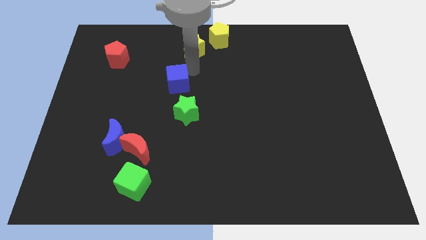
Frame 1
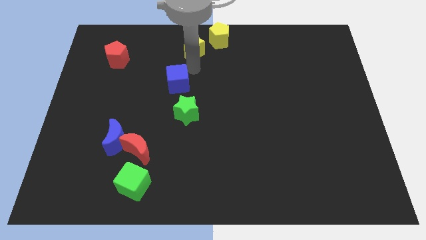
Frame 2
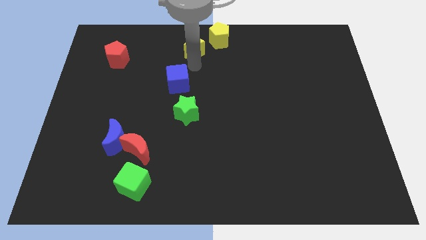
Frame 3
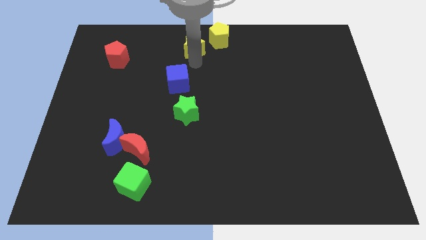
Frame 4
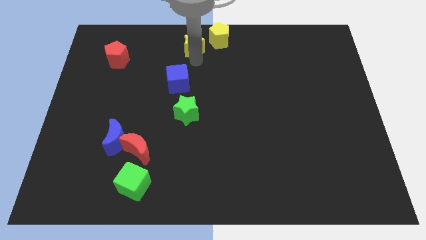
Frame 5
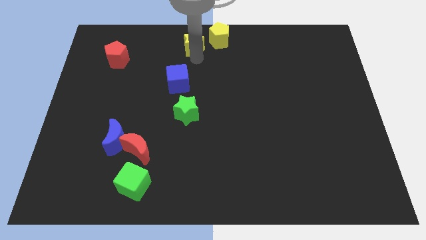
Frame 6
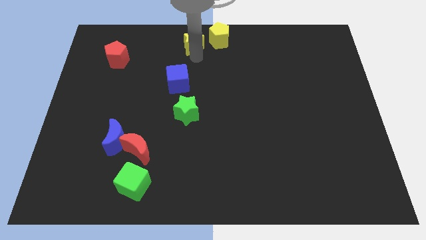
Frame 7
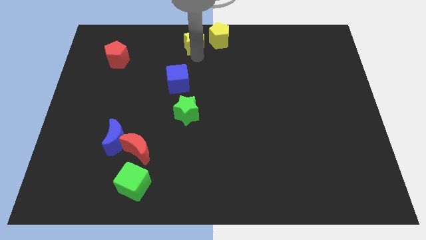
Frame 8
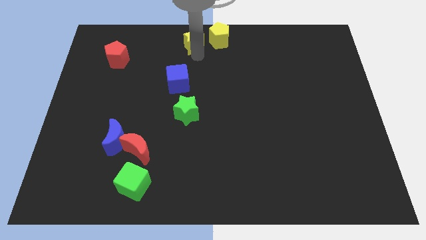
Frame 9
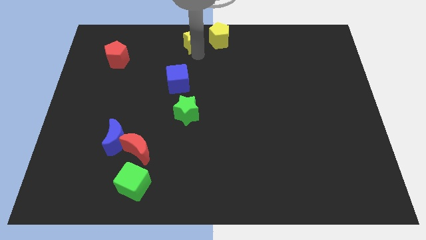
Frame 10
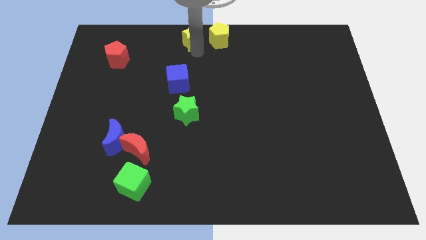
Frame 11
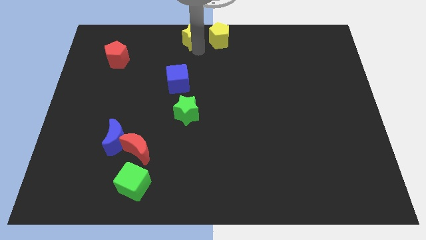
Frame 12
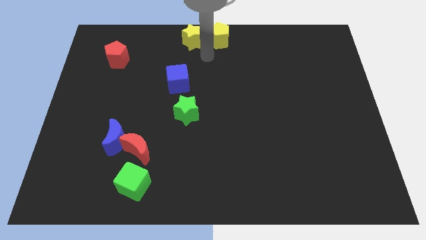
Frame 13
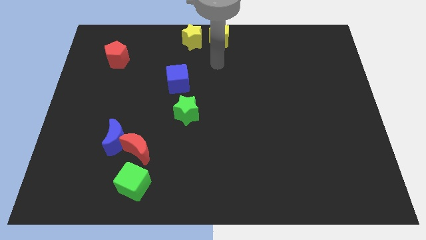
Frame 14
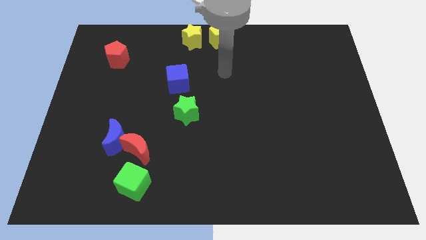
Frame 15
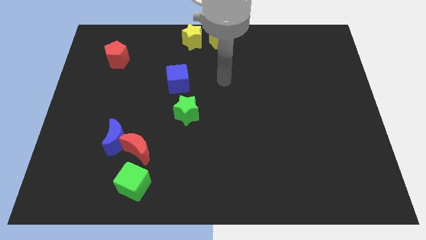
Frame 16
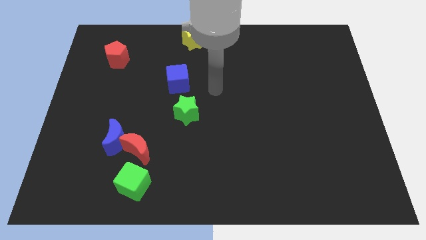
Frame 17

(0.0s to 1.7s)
move the yellow star left to the yellow pentagon

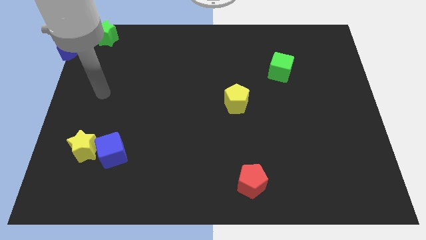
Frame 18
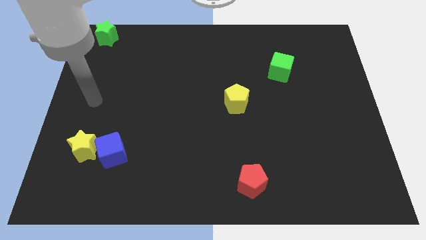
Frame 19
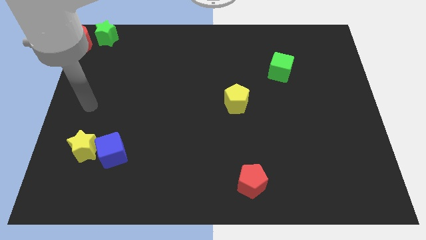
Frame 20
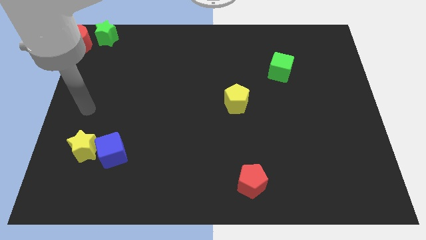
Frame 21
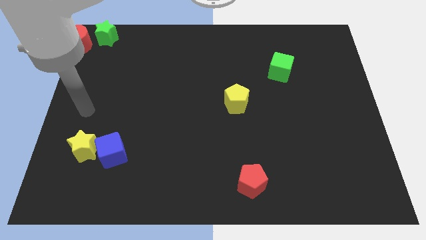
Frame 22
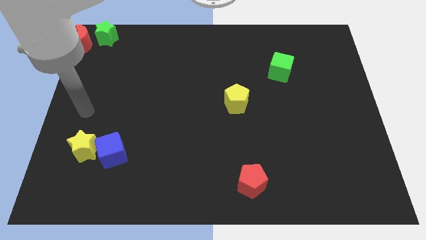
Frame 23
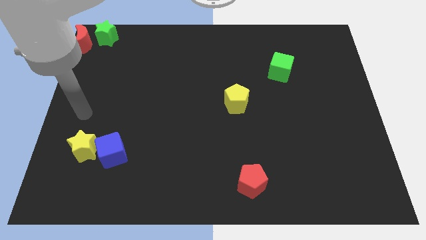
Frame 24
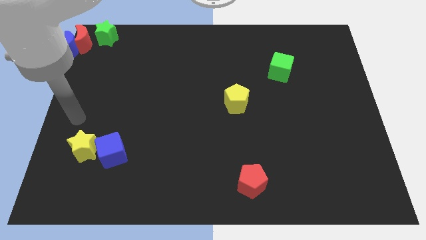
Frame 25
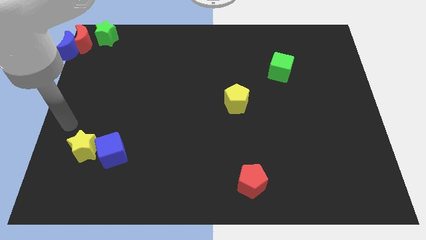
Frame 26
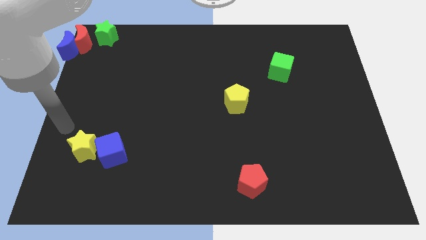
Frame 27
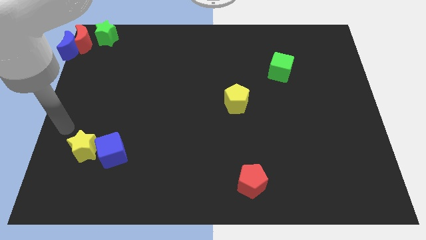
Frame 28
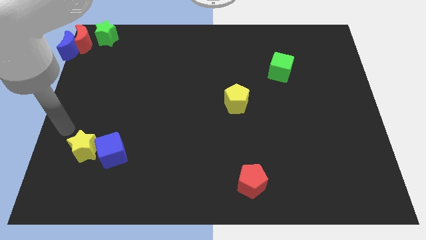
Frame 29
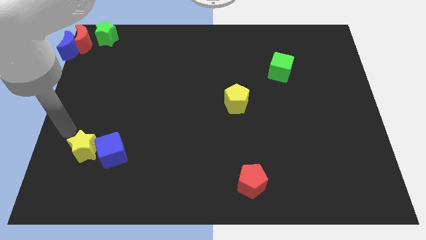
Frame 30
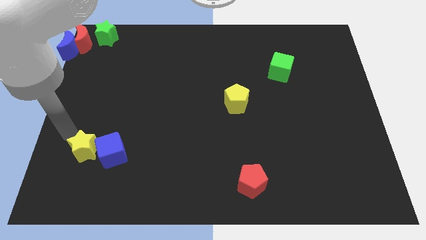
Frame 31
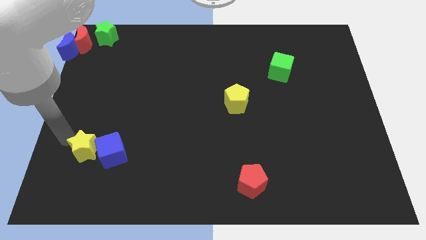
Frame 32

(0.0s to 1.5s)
move your arm towards the yellow star

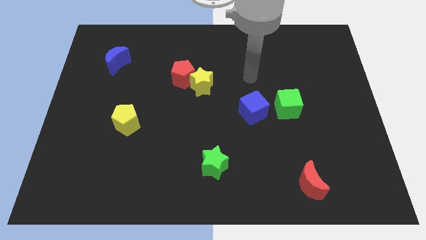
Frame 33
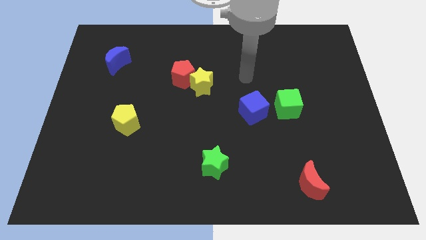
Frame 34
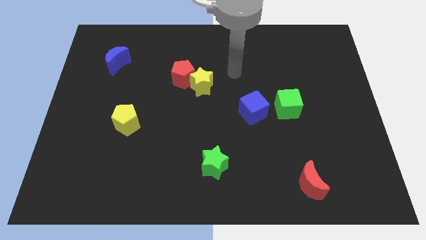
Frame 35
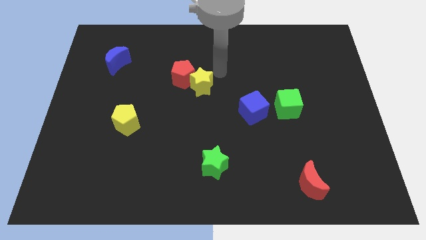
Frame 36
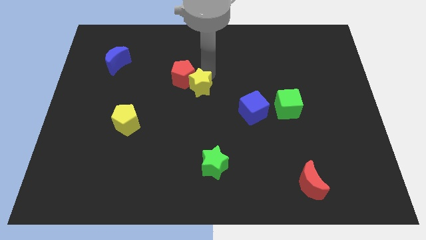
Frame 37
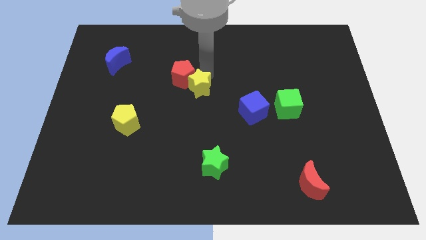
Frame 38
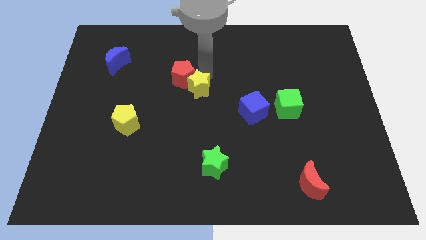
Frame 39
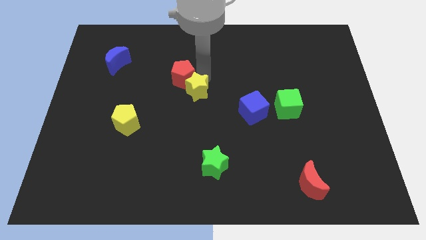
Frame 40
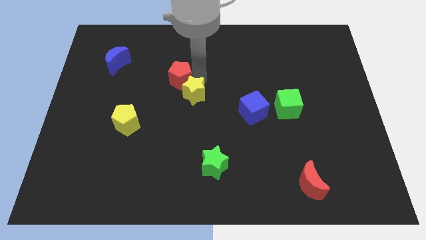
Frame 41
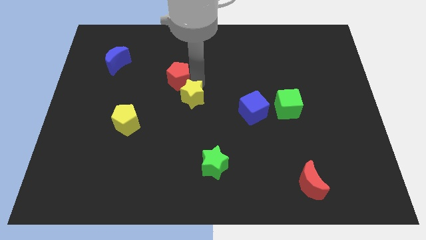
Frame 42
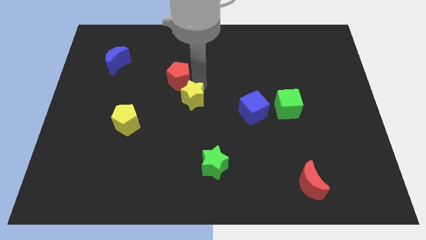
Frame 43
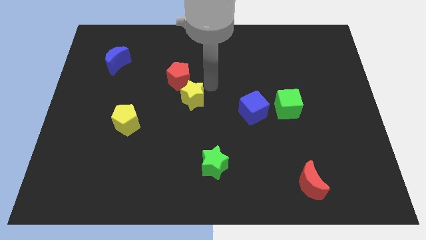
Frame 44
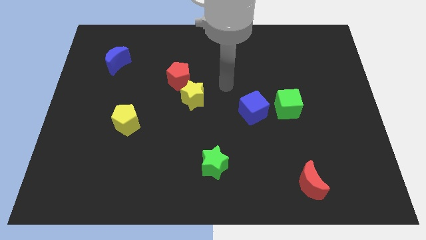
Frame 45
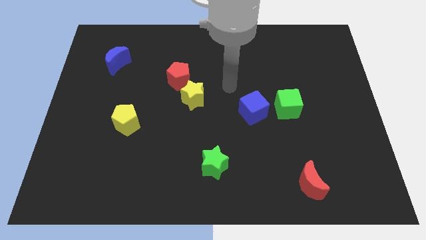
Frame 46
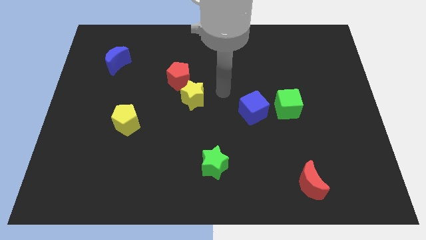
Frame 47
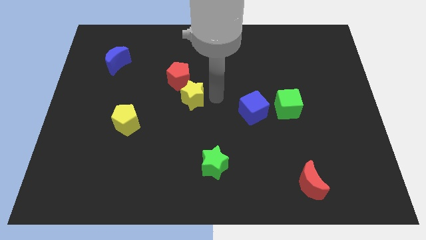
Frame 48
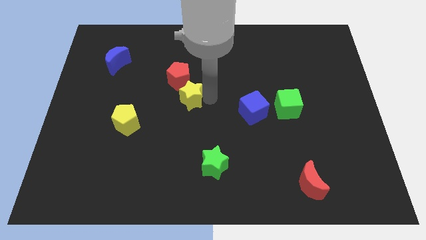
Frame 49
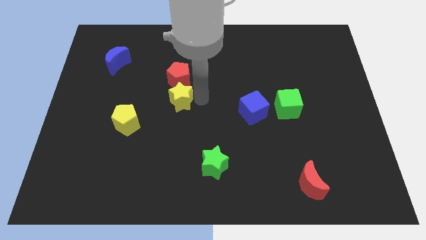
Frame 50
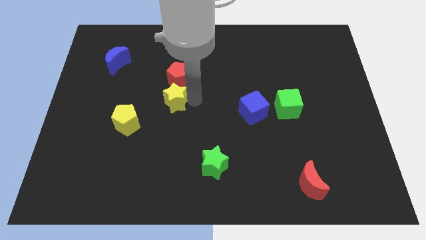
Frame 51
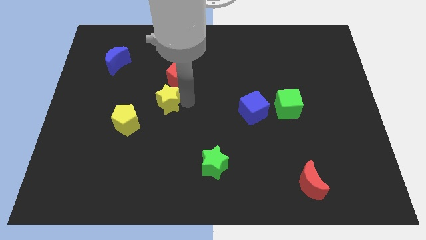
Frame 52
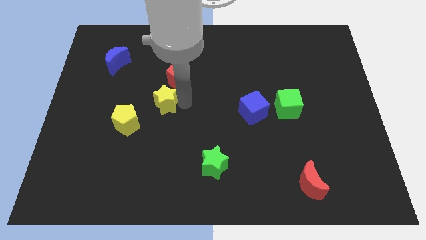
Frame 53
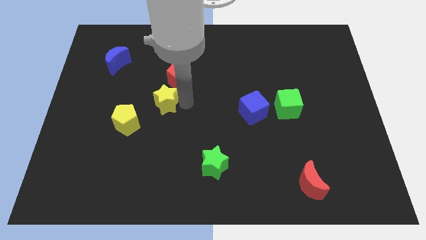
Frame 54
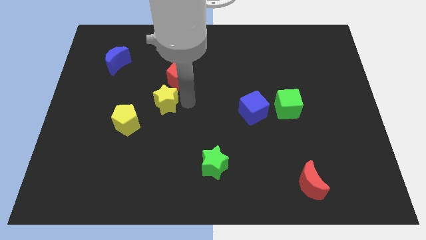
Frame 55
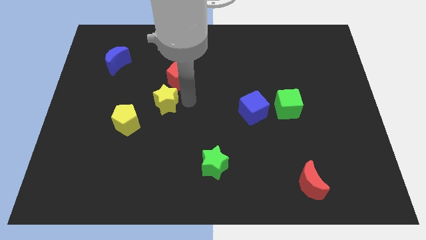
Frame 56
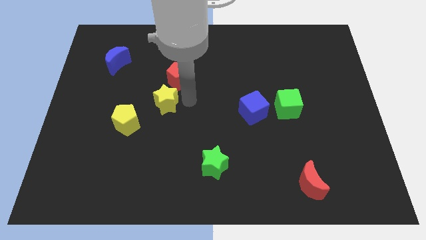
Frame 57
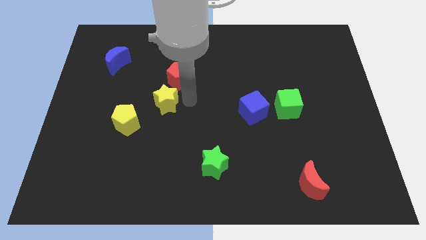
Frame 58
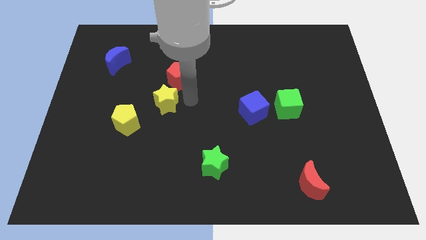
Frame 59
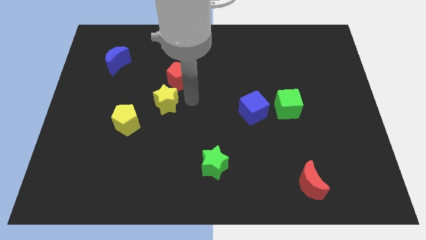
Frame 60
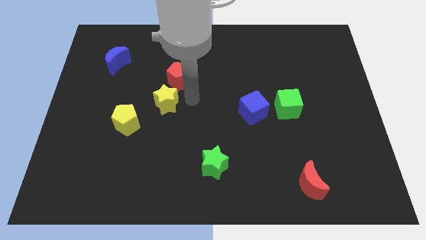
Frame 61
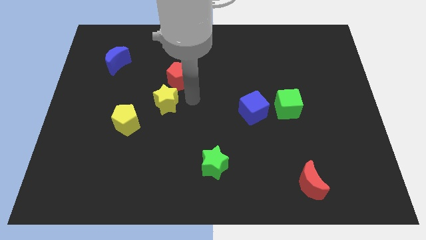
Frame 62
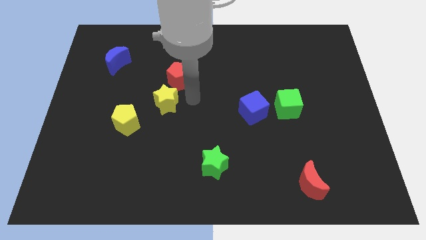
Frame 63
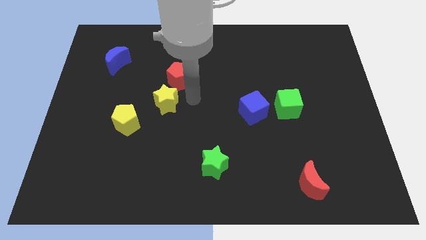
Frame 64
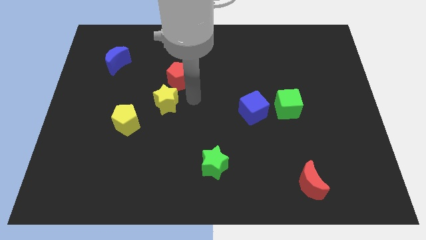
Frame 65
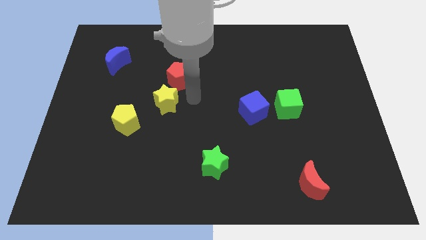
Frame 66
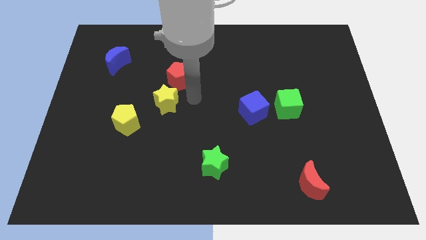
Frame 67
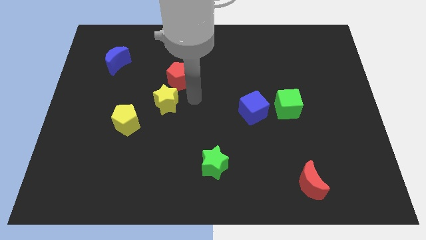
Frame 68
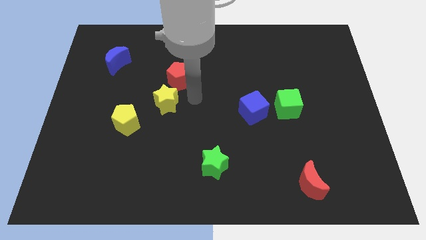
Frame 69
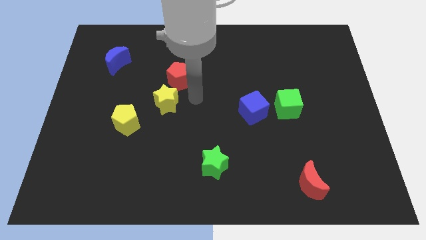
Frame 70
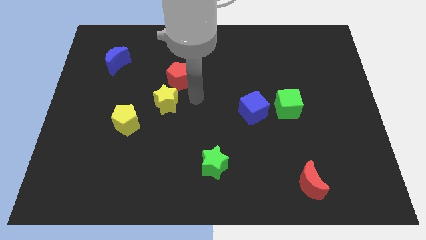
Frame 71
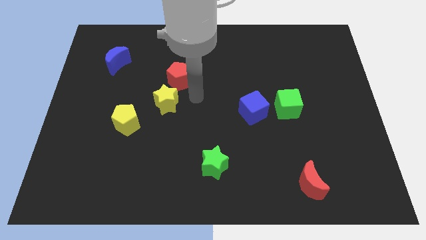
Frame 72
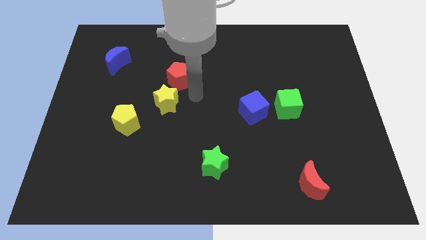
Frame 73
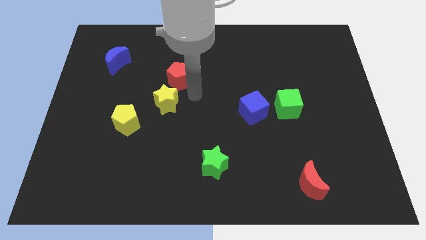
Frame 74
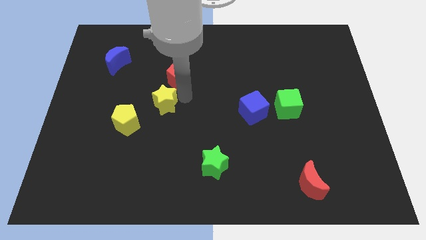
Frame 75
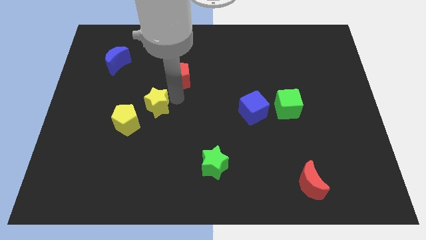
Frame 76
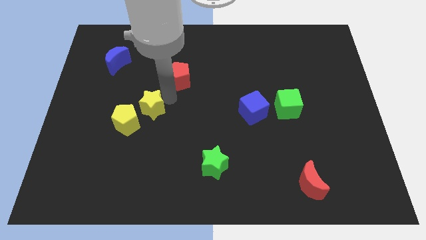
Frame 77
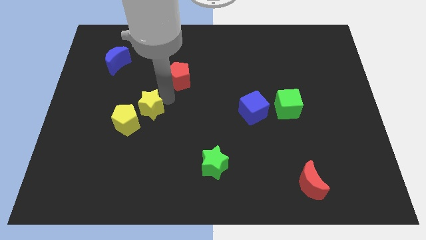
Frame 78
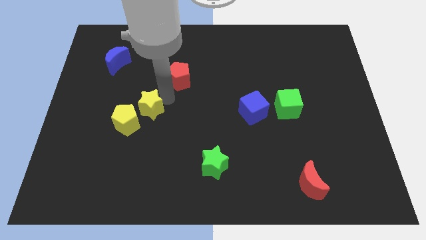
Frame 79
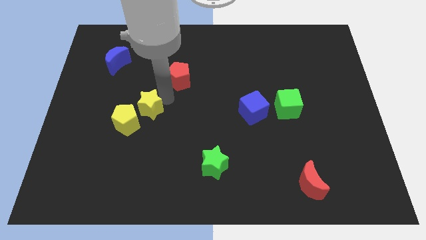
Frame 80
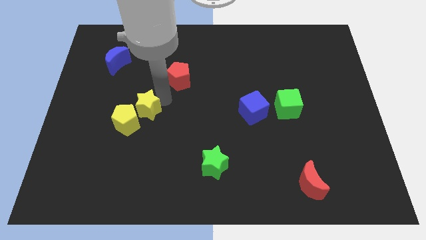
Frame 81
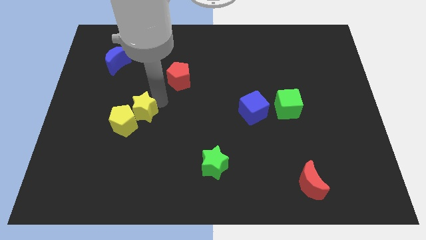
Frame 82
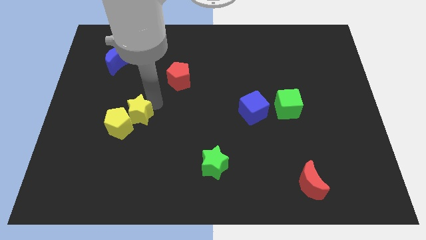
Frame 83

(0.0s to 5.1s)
place the yellow star to the top right of the yellow pentagon

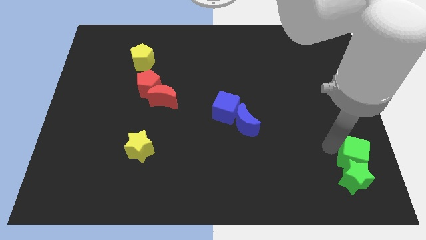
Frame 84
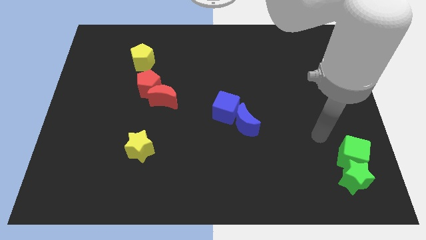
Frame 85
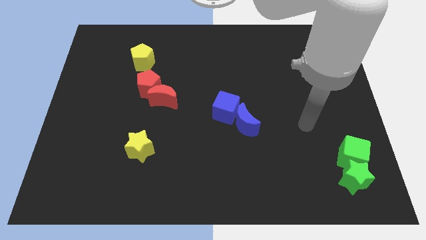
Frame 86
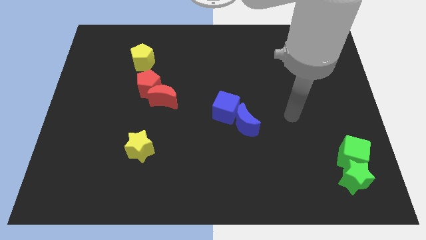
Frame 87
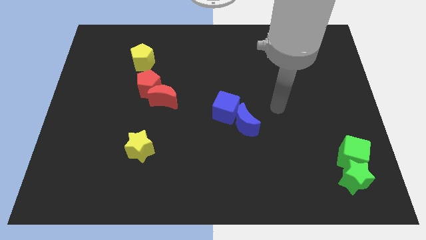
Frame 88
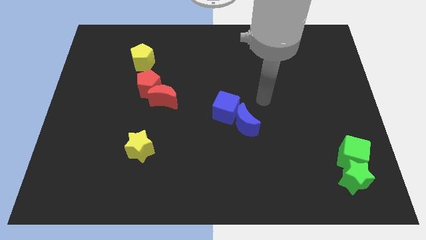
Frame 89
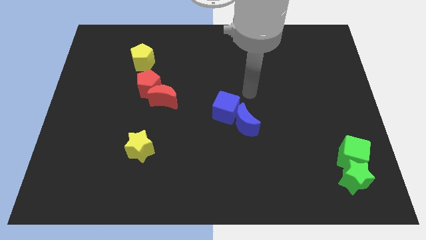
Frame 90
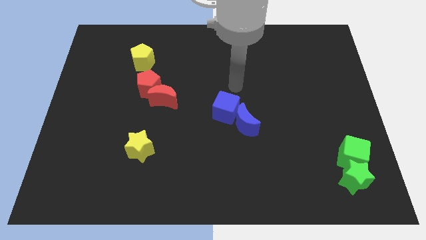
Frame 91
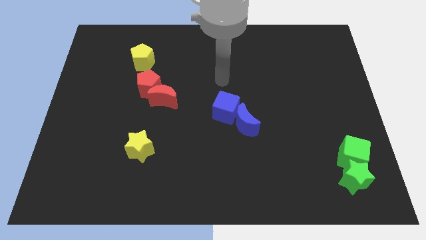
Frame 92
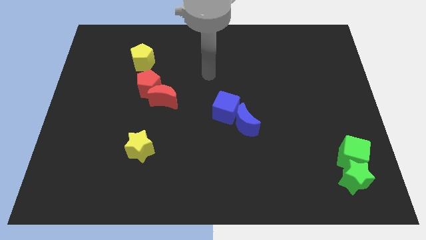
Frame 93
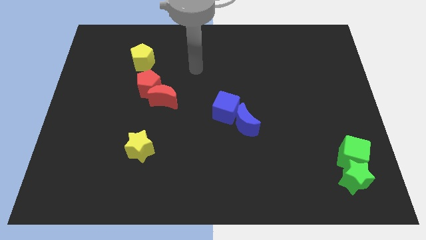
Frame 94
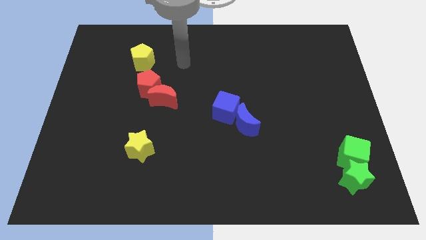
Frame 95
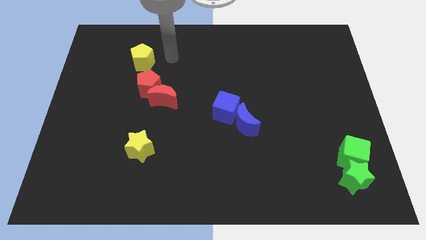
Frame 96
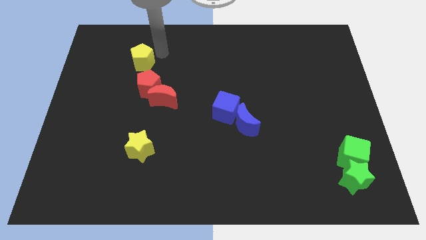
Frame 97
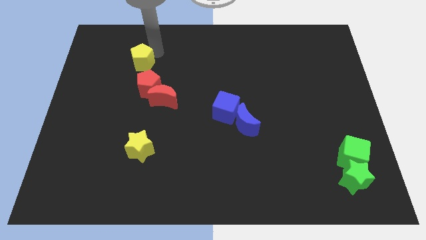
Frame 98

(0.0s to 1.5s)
place the arm to the right of the yellow pentagon
